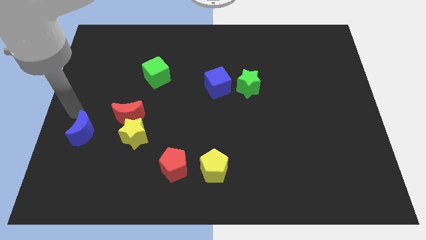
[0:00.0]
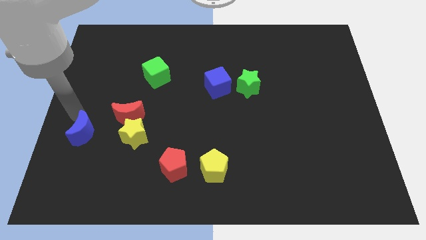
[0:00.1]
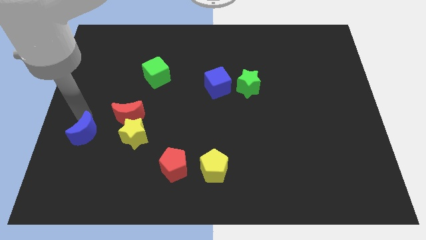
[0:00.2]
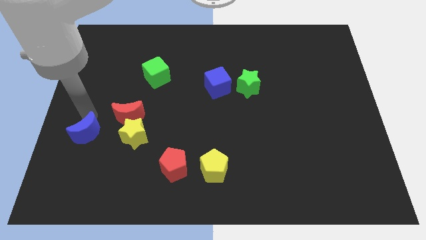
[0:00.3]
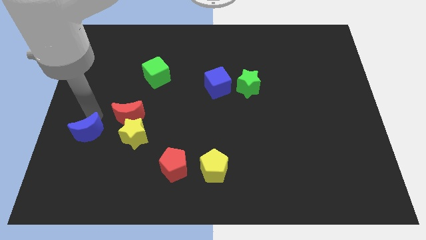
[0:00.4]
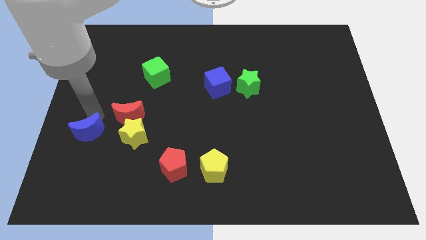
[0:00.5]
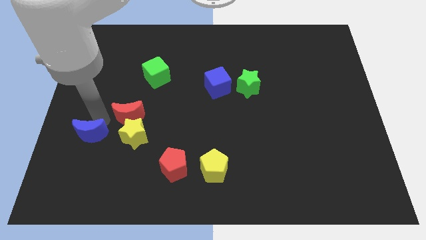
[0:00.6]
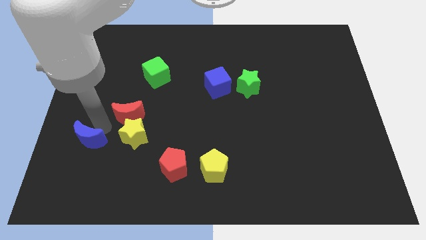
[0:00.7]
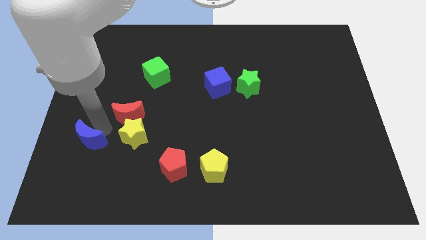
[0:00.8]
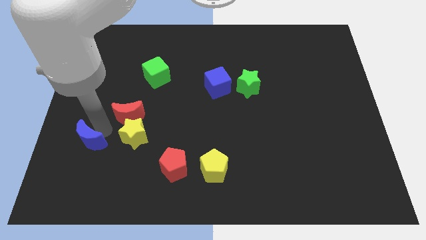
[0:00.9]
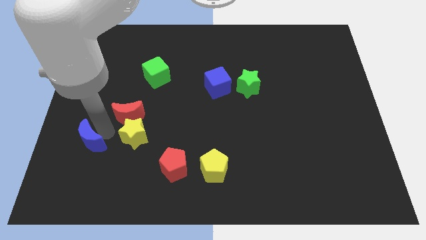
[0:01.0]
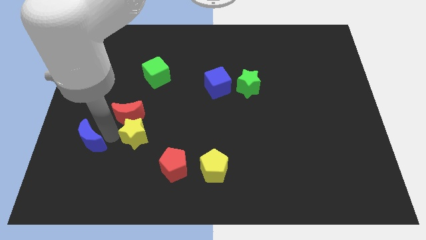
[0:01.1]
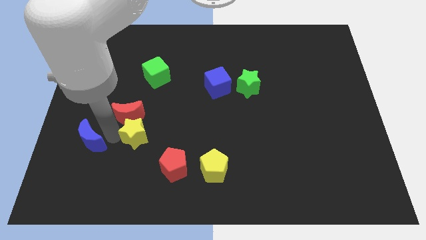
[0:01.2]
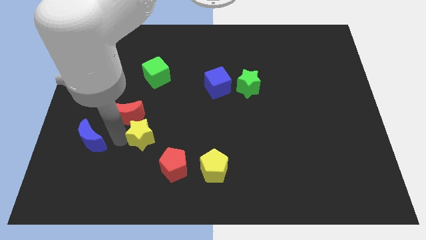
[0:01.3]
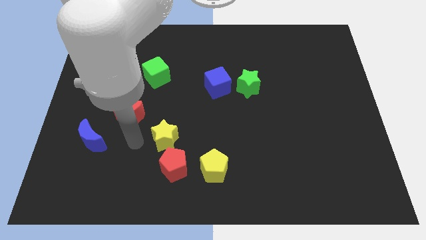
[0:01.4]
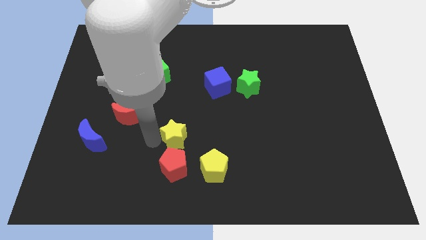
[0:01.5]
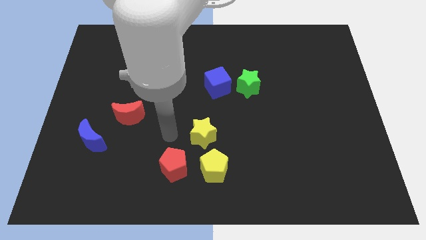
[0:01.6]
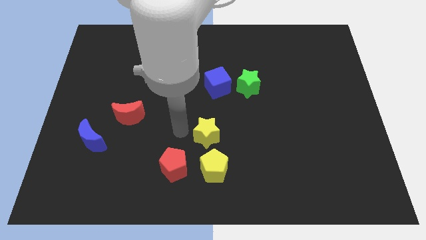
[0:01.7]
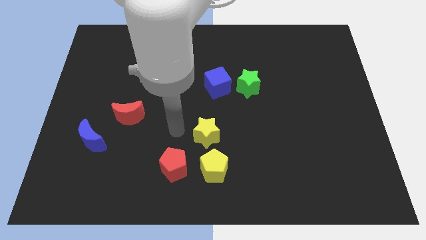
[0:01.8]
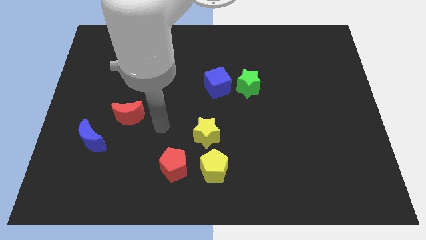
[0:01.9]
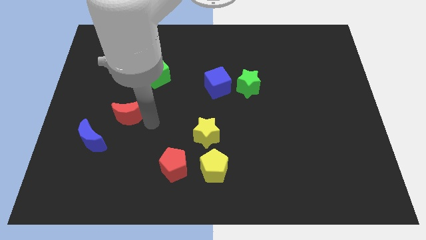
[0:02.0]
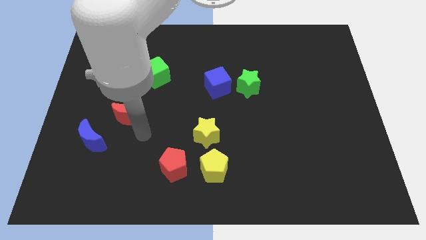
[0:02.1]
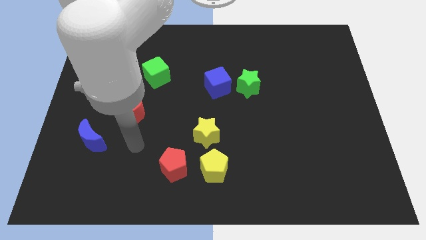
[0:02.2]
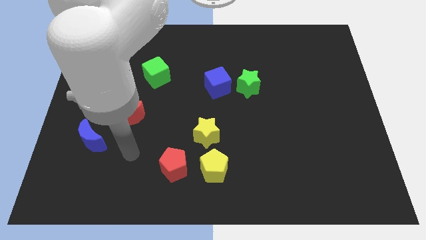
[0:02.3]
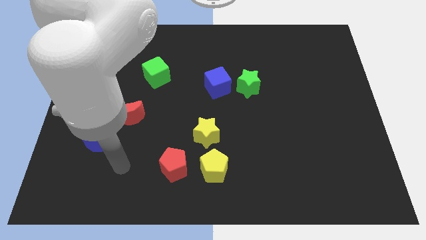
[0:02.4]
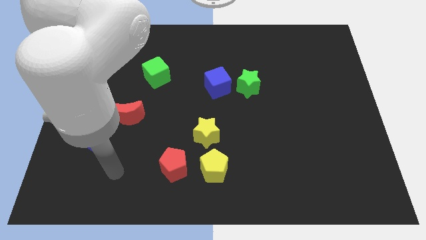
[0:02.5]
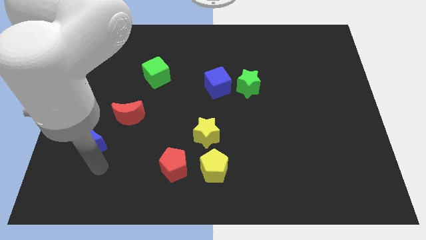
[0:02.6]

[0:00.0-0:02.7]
move yellow star towards the top of the yellow pentagon

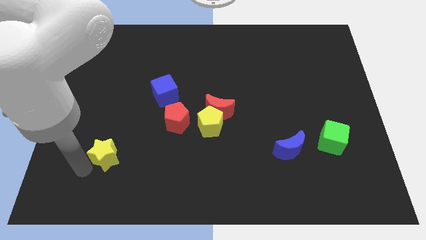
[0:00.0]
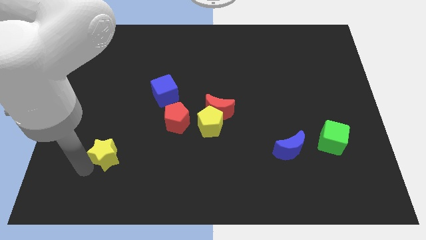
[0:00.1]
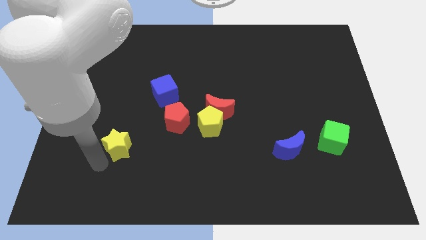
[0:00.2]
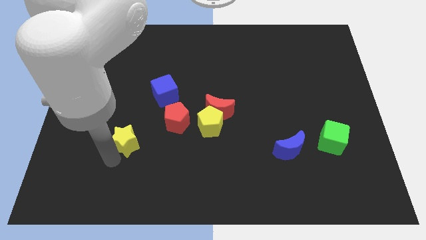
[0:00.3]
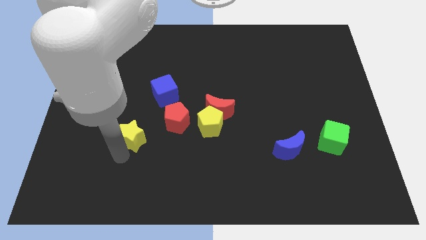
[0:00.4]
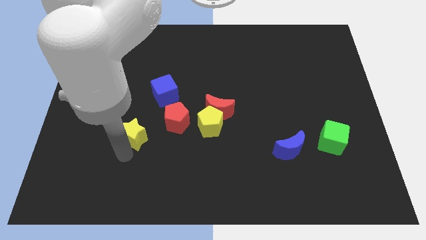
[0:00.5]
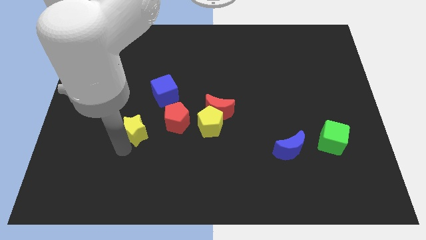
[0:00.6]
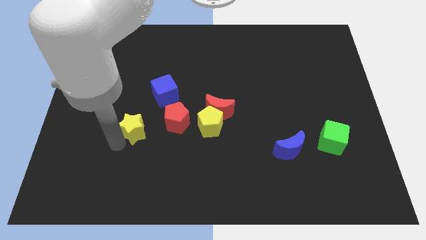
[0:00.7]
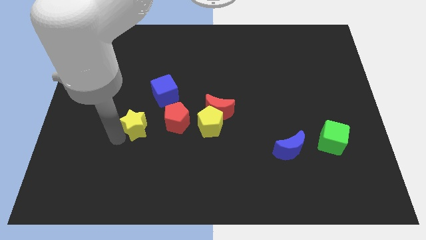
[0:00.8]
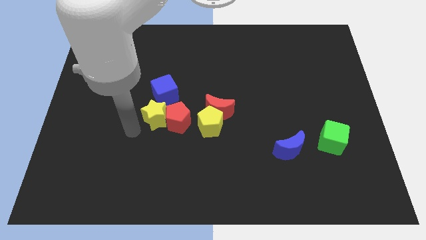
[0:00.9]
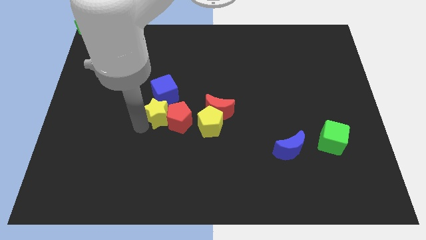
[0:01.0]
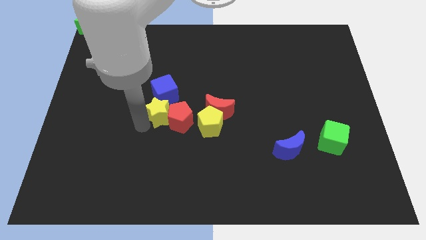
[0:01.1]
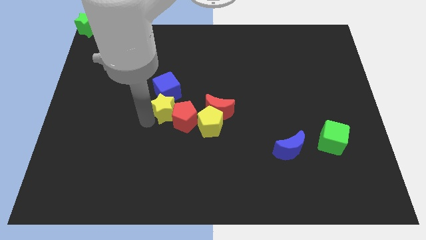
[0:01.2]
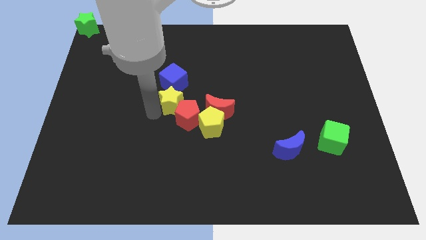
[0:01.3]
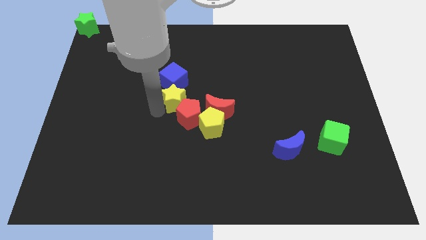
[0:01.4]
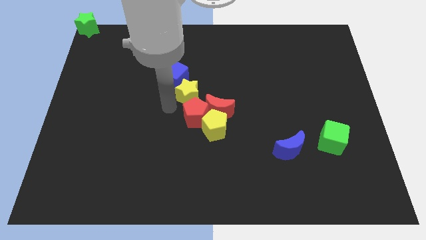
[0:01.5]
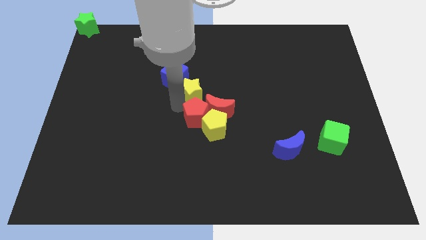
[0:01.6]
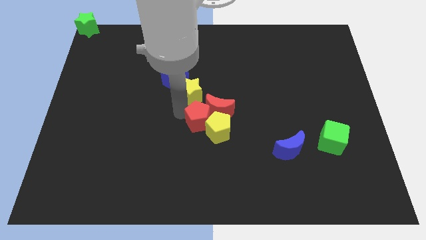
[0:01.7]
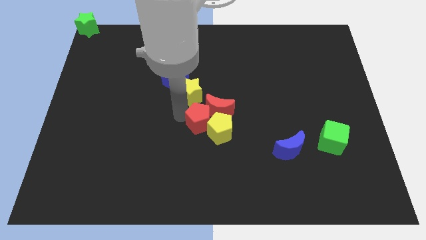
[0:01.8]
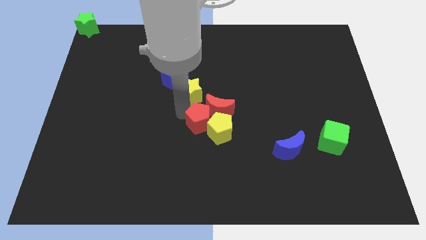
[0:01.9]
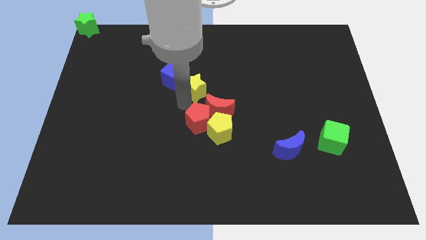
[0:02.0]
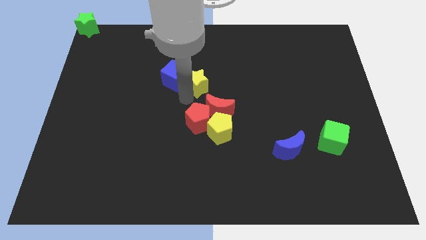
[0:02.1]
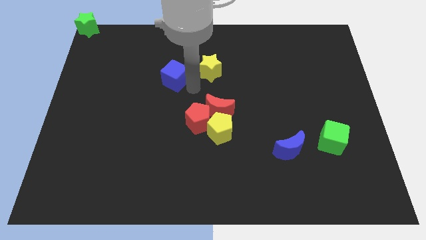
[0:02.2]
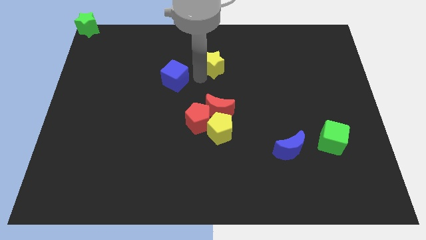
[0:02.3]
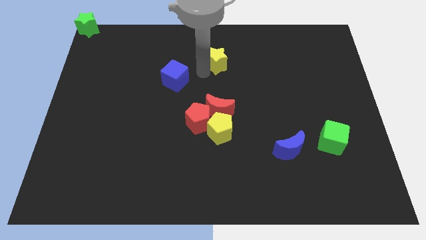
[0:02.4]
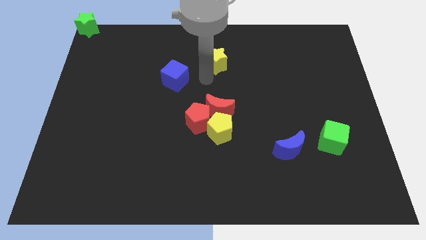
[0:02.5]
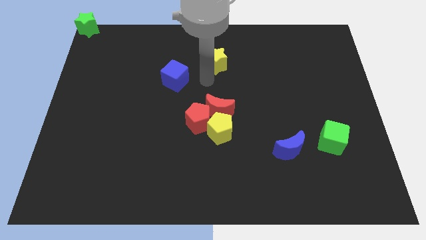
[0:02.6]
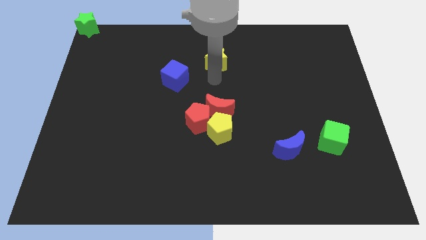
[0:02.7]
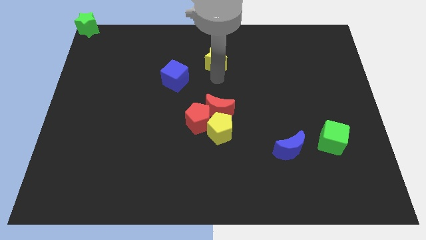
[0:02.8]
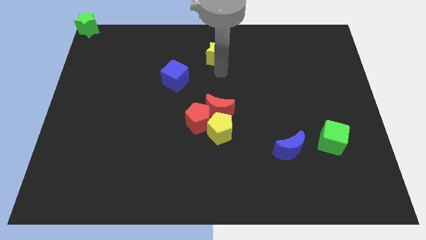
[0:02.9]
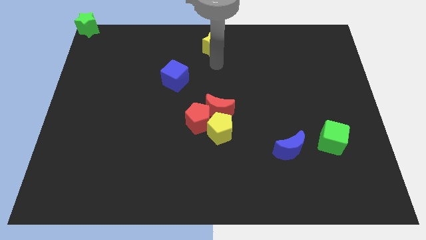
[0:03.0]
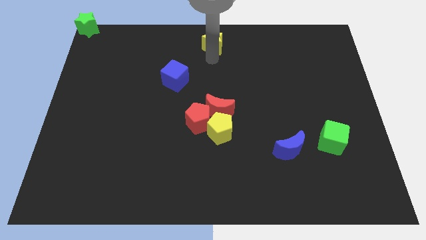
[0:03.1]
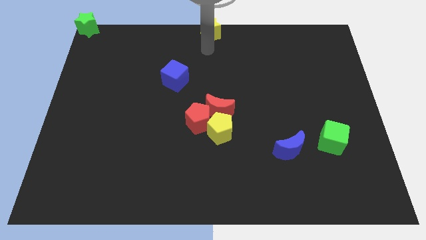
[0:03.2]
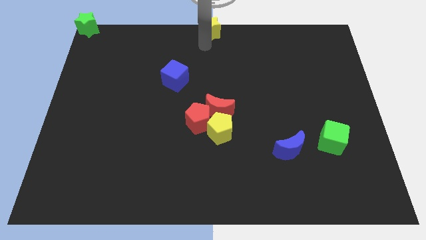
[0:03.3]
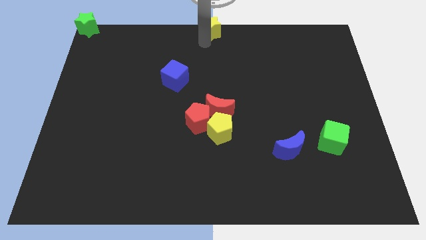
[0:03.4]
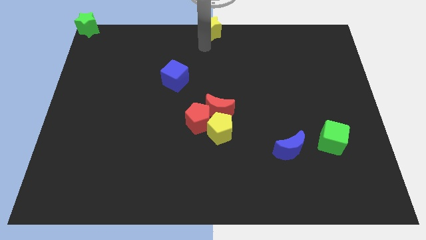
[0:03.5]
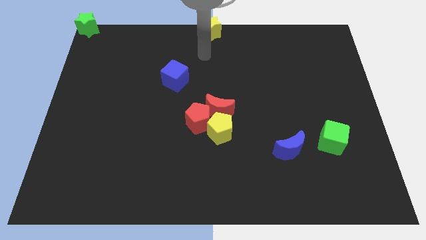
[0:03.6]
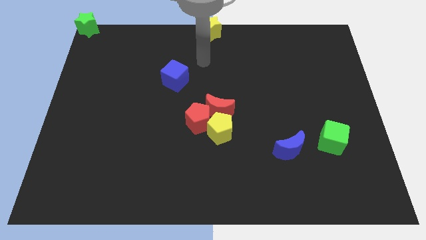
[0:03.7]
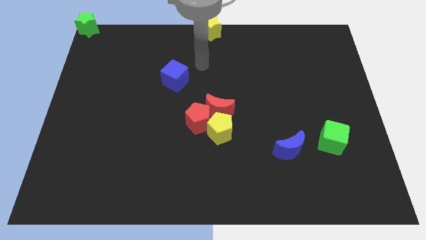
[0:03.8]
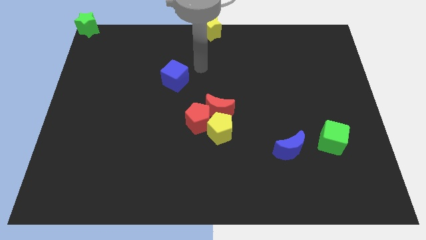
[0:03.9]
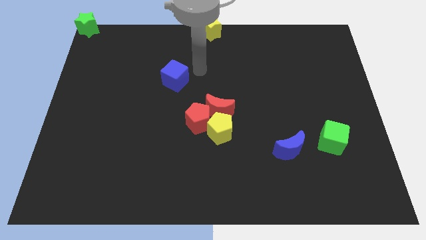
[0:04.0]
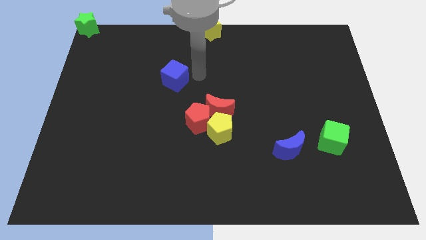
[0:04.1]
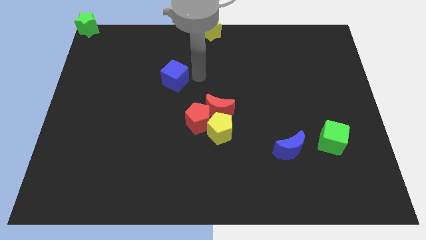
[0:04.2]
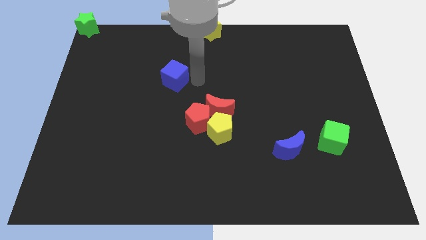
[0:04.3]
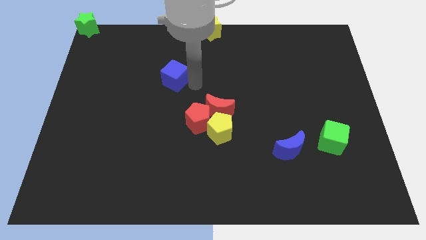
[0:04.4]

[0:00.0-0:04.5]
place the yellow star at the top center of the board

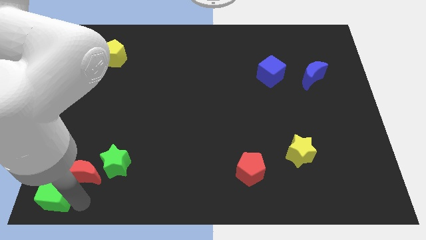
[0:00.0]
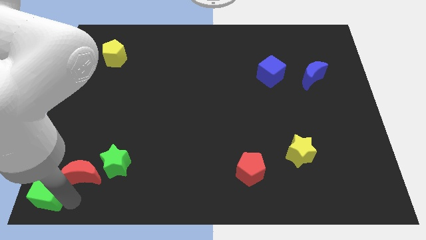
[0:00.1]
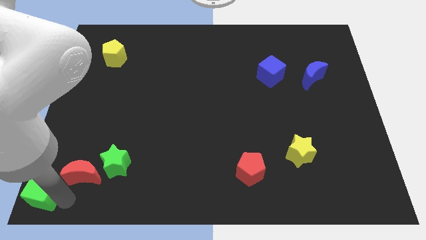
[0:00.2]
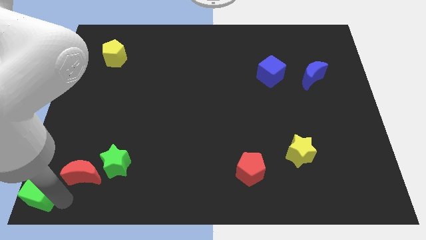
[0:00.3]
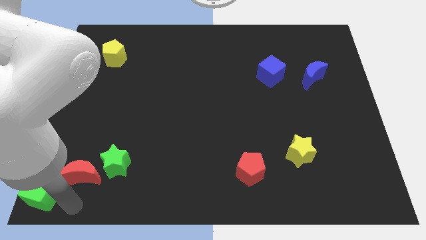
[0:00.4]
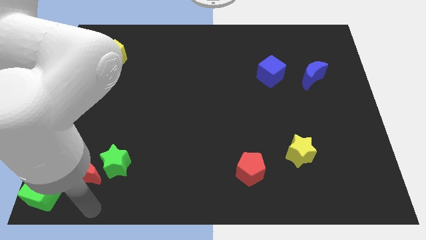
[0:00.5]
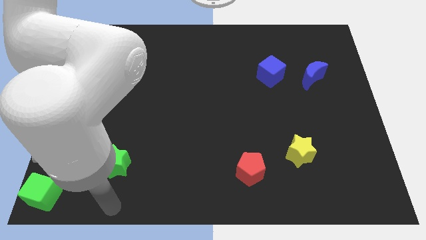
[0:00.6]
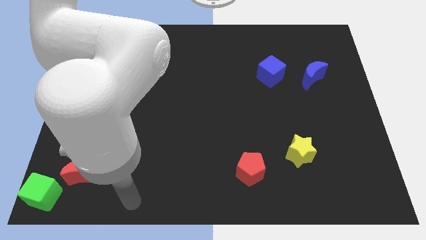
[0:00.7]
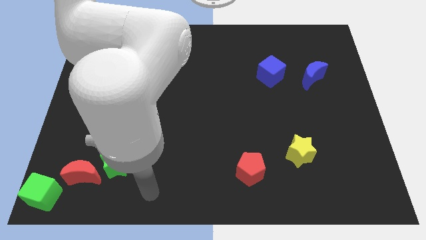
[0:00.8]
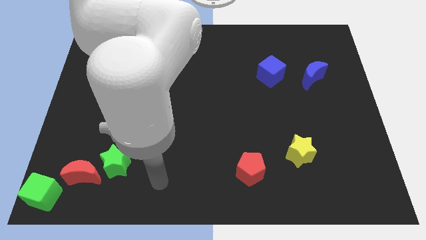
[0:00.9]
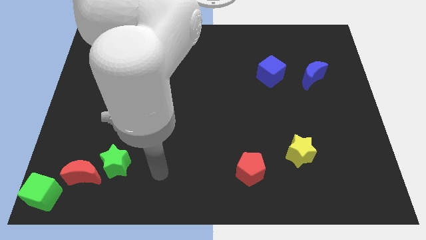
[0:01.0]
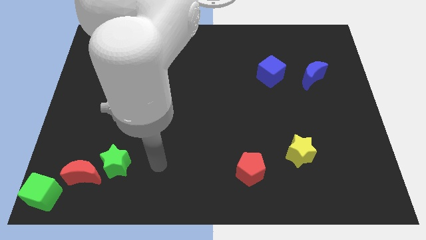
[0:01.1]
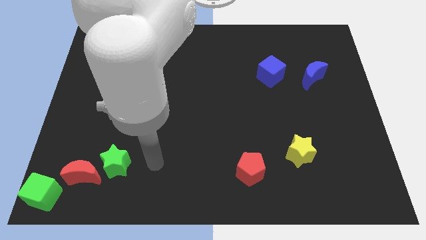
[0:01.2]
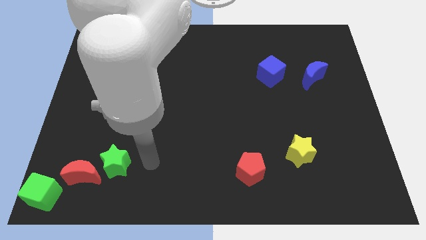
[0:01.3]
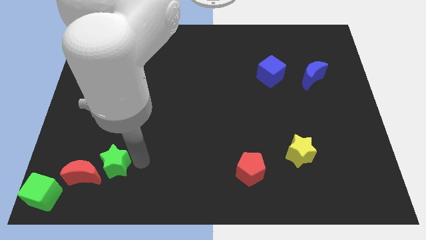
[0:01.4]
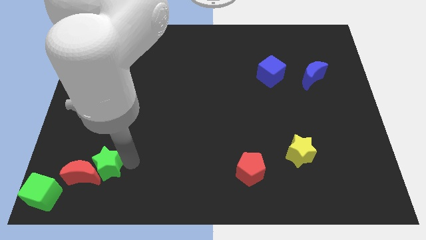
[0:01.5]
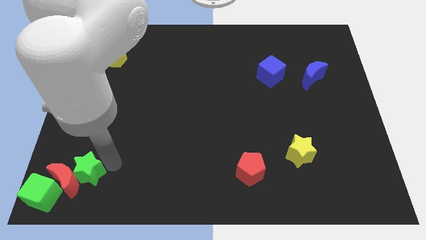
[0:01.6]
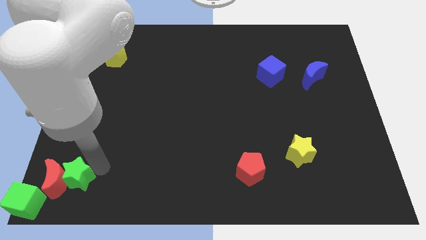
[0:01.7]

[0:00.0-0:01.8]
push the green star into the red crescent to bottom left corner
